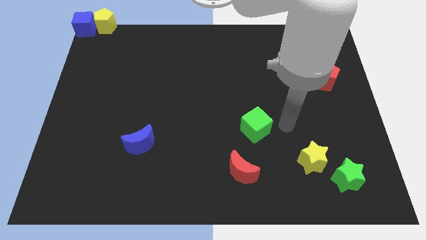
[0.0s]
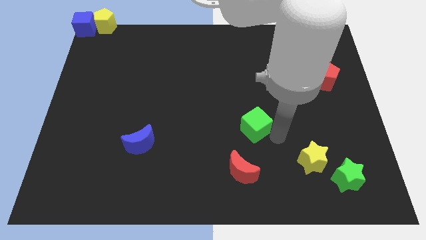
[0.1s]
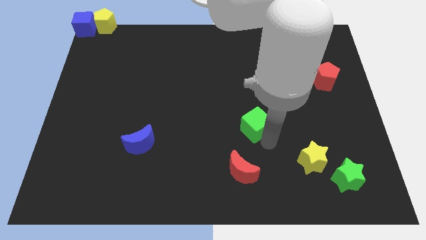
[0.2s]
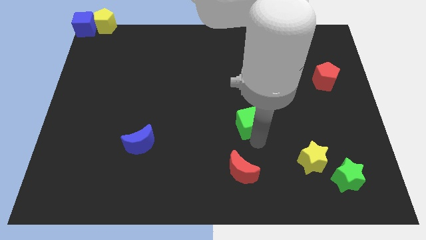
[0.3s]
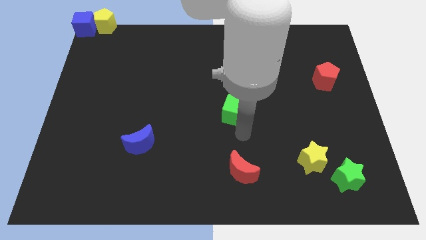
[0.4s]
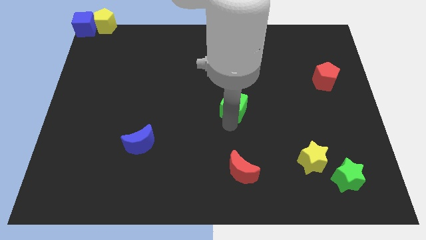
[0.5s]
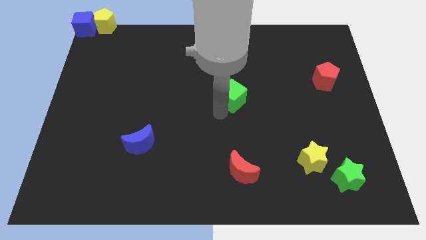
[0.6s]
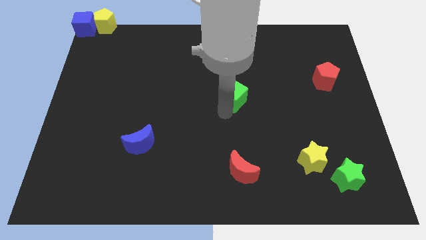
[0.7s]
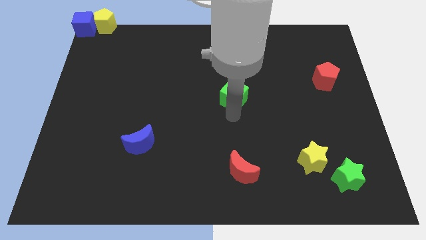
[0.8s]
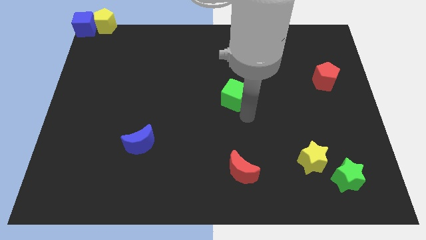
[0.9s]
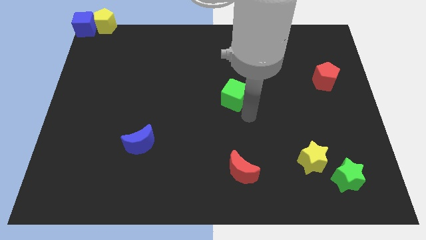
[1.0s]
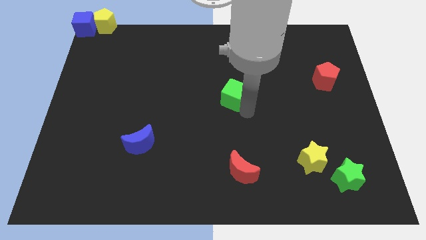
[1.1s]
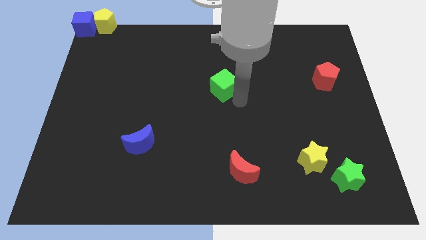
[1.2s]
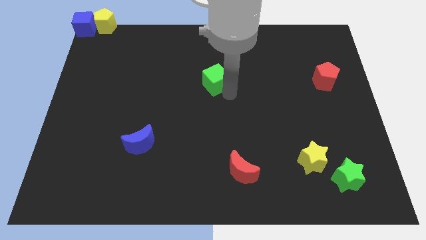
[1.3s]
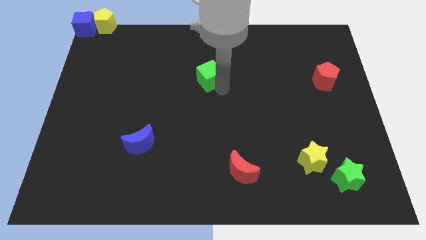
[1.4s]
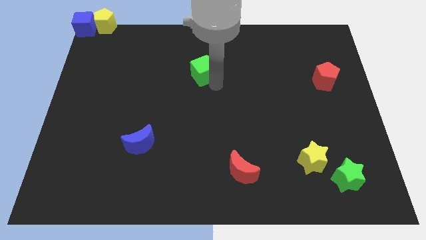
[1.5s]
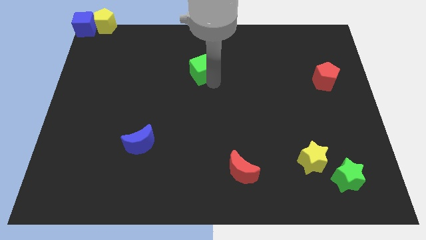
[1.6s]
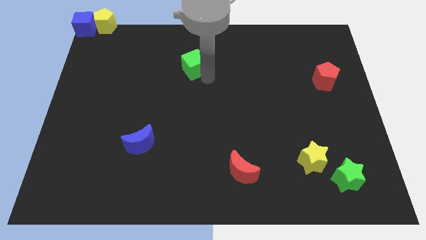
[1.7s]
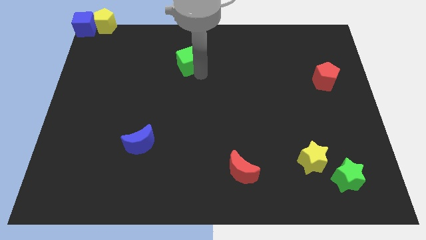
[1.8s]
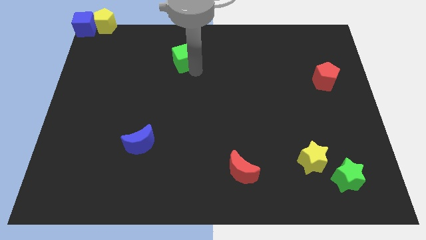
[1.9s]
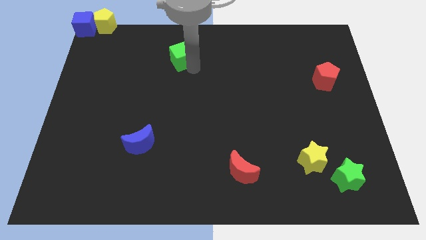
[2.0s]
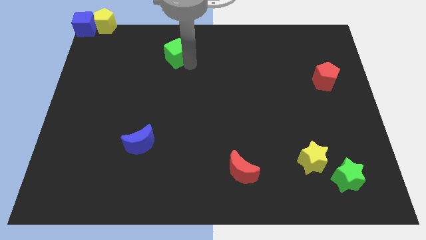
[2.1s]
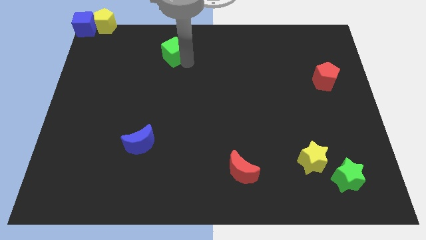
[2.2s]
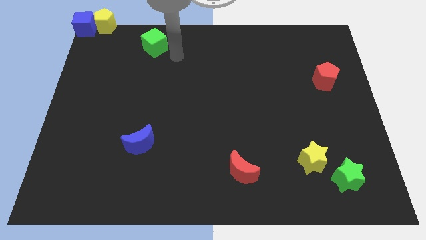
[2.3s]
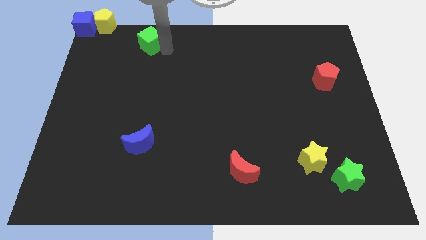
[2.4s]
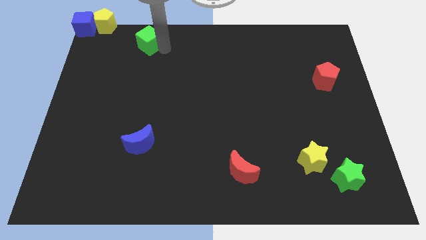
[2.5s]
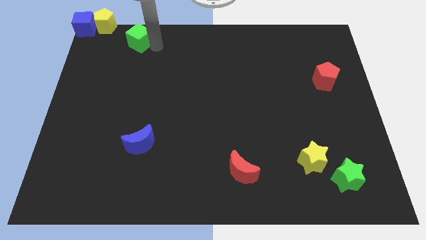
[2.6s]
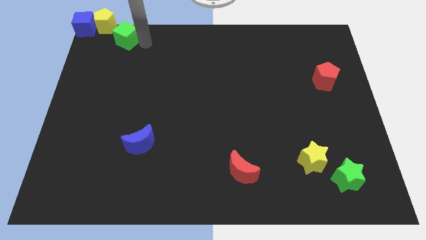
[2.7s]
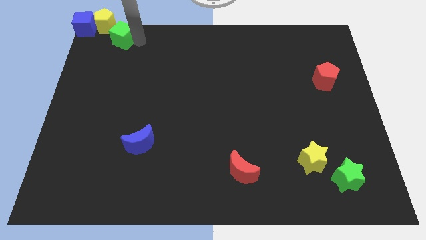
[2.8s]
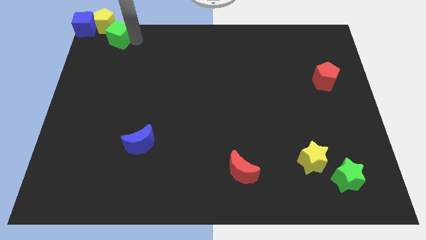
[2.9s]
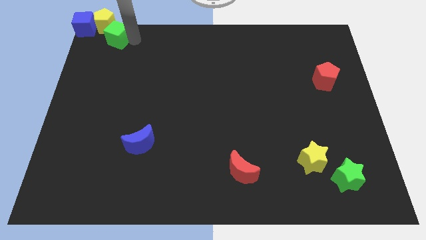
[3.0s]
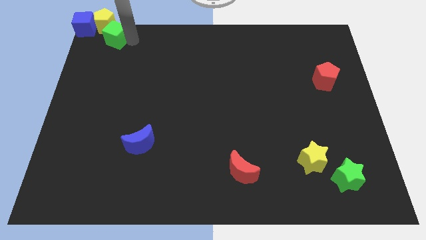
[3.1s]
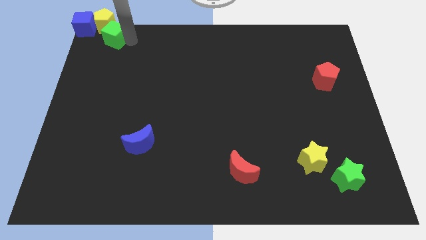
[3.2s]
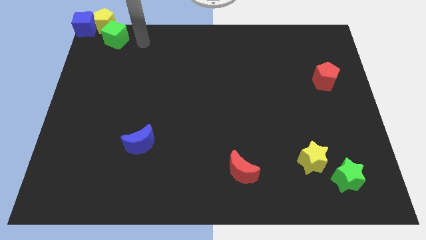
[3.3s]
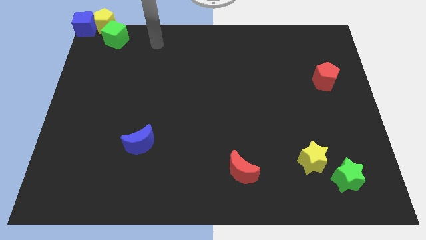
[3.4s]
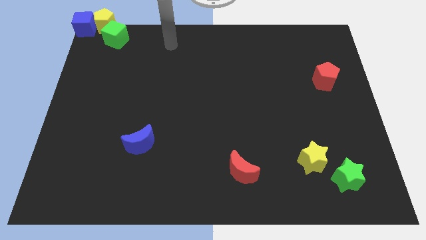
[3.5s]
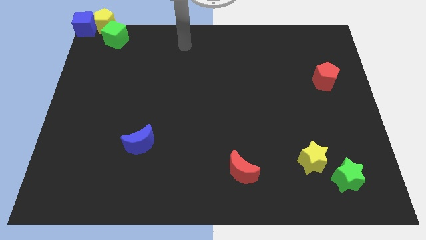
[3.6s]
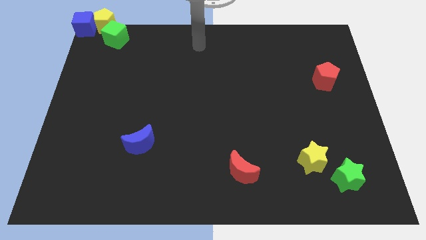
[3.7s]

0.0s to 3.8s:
push the green cube to the bottom right of the yellow pentagon

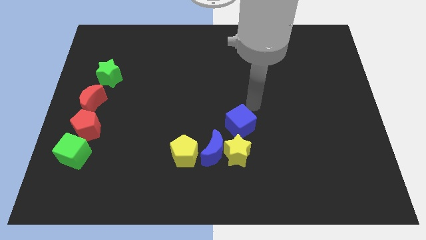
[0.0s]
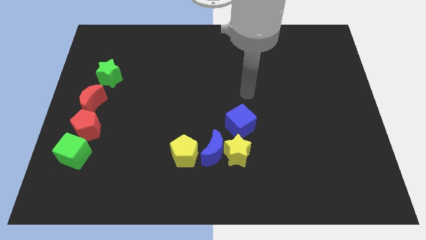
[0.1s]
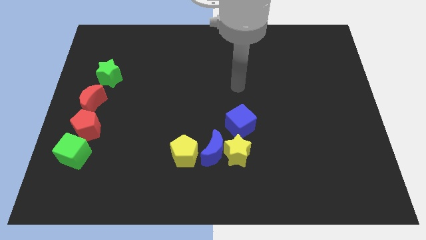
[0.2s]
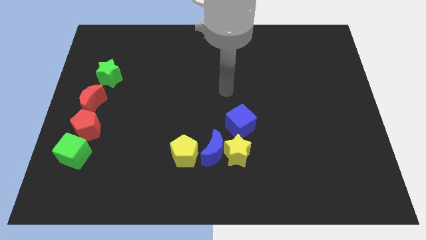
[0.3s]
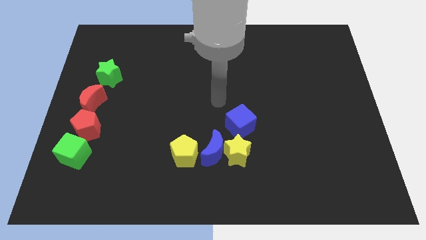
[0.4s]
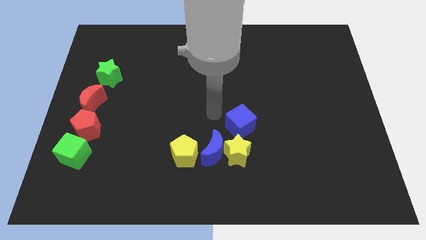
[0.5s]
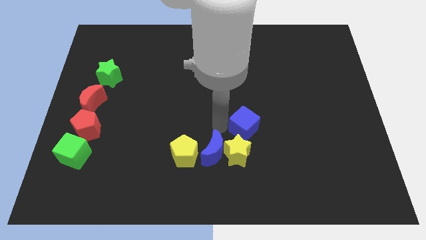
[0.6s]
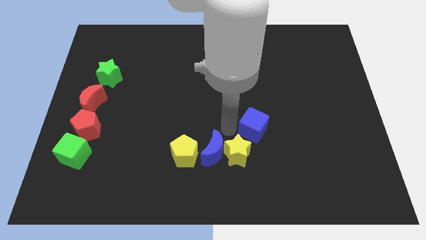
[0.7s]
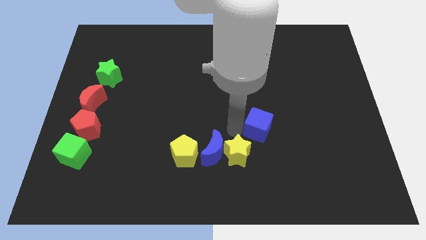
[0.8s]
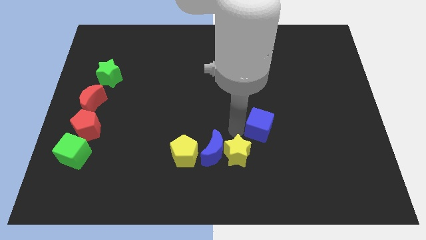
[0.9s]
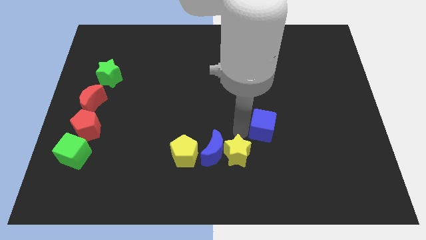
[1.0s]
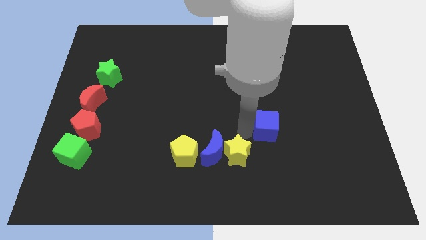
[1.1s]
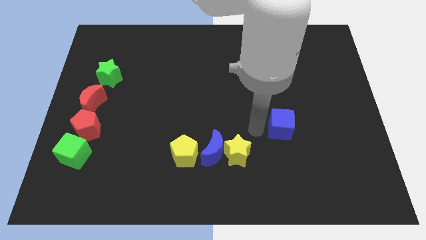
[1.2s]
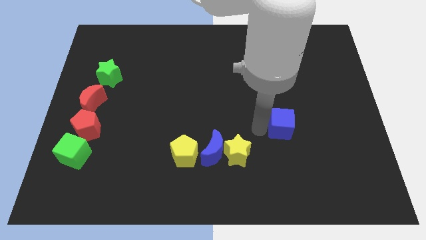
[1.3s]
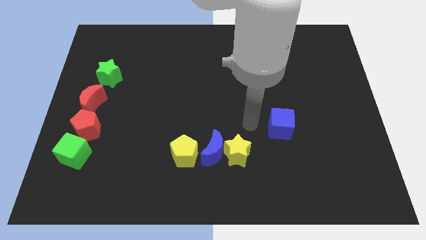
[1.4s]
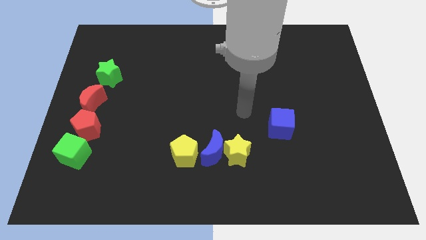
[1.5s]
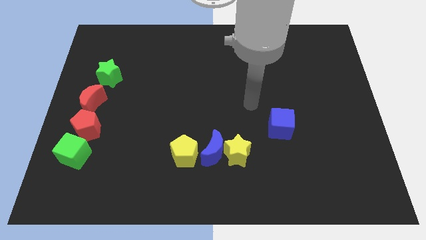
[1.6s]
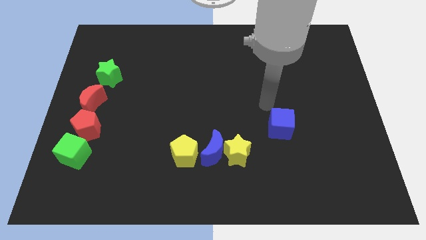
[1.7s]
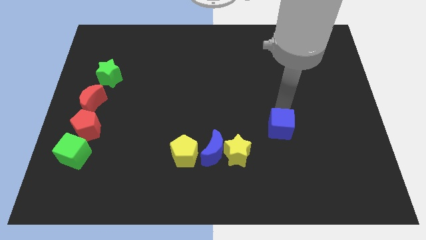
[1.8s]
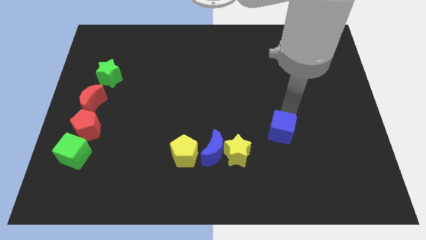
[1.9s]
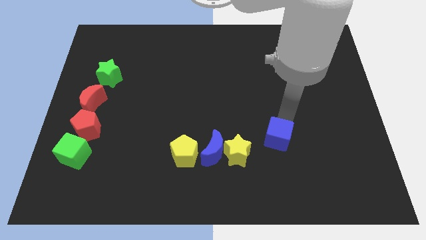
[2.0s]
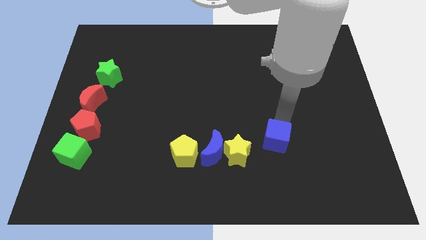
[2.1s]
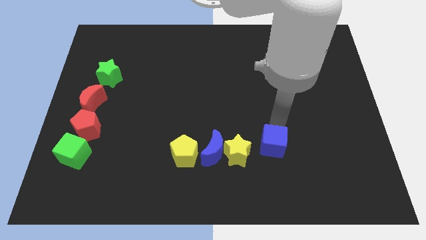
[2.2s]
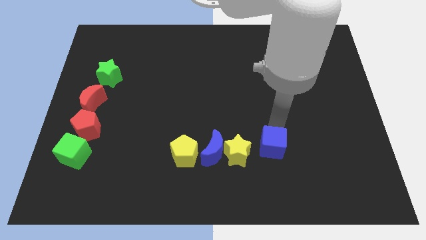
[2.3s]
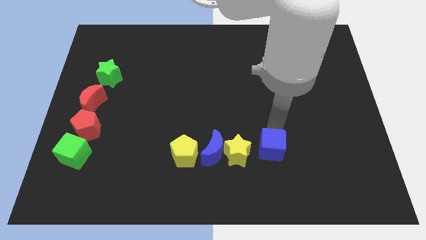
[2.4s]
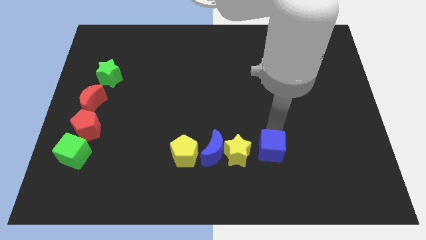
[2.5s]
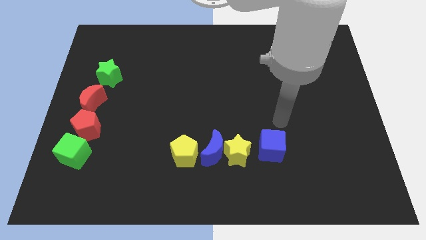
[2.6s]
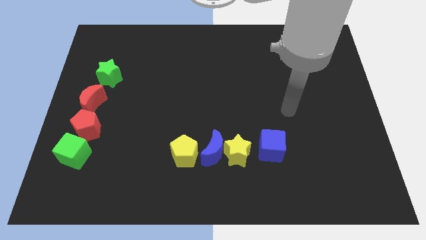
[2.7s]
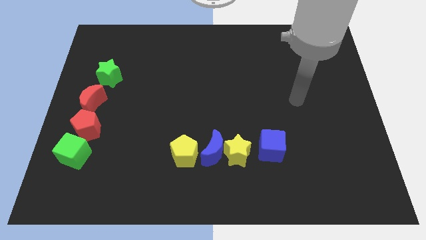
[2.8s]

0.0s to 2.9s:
place blue cube to the right of yellow star

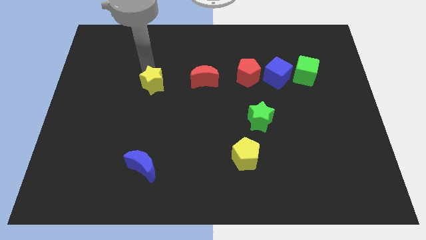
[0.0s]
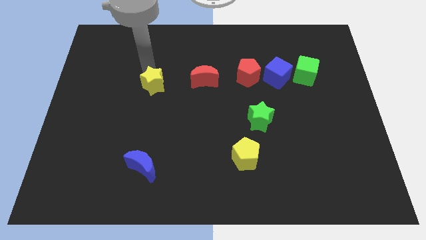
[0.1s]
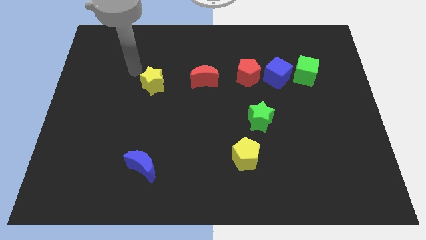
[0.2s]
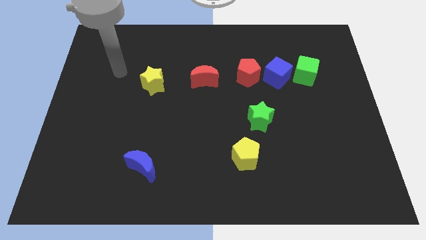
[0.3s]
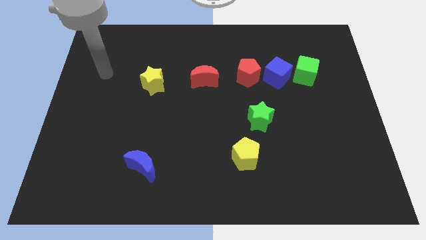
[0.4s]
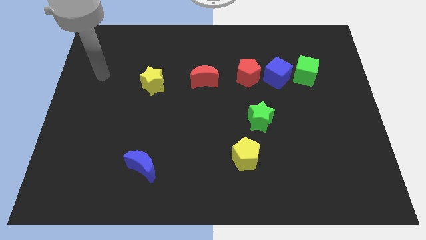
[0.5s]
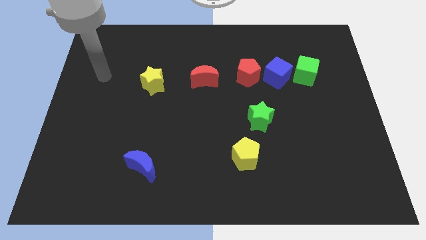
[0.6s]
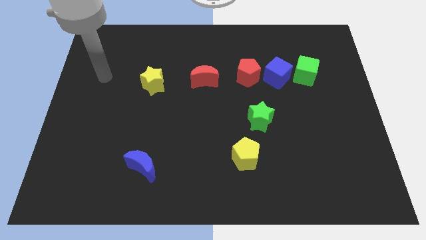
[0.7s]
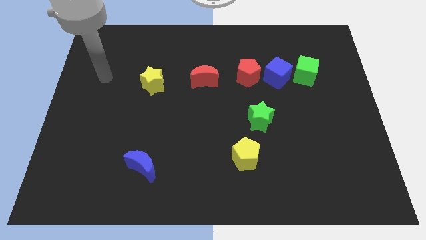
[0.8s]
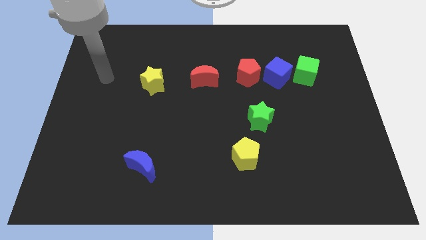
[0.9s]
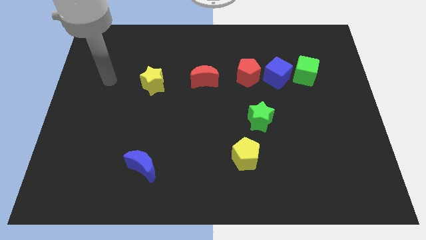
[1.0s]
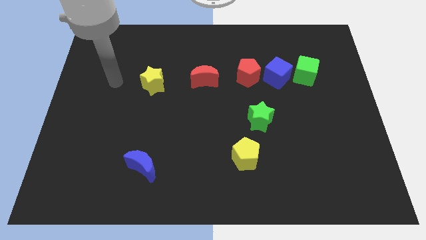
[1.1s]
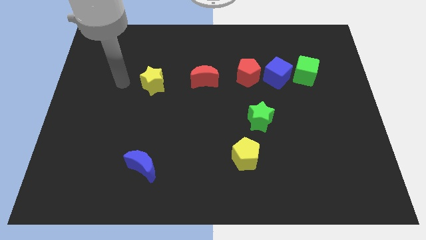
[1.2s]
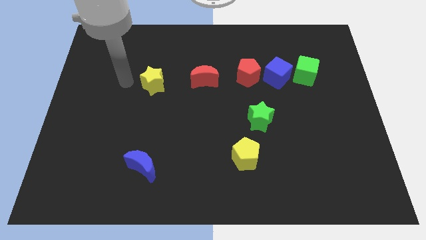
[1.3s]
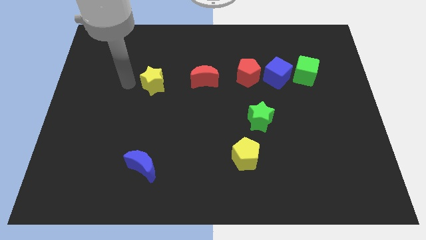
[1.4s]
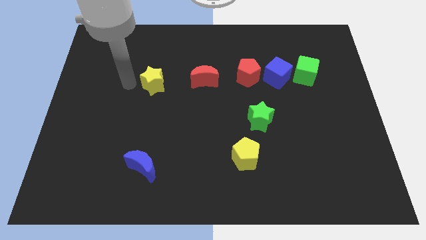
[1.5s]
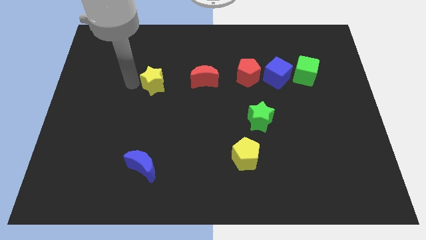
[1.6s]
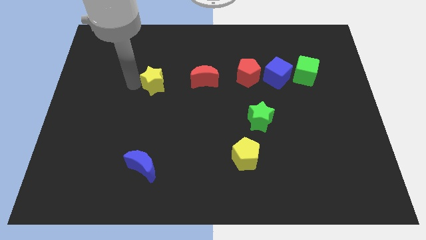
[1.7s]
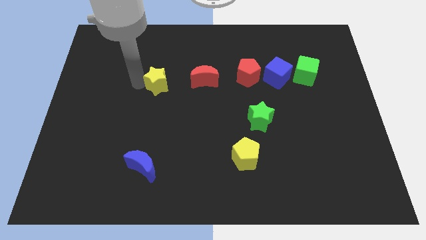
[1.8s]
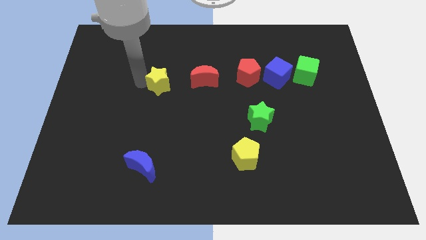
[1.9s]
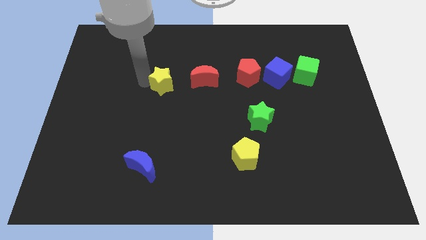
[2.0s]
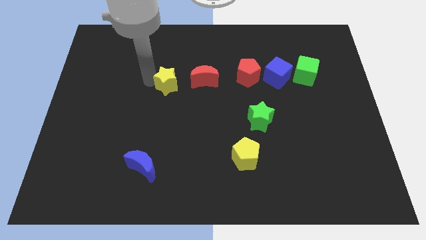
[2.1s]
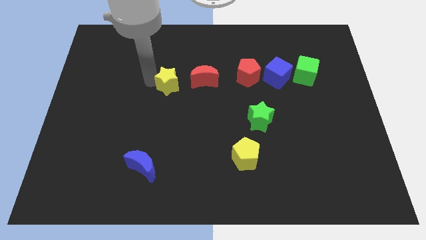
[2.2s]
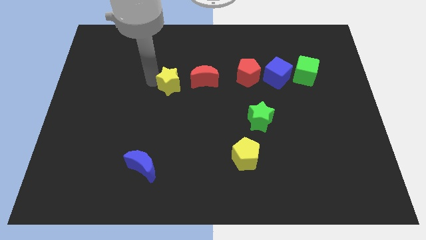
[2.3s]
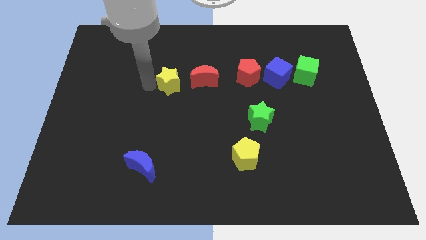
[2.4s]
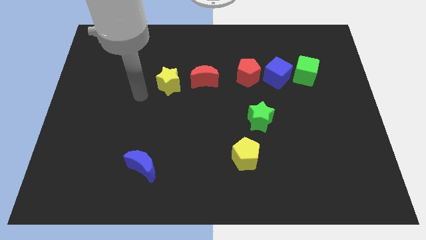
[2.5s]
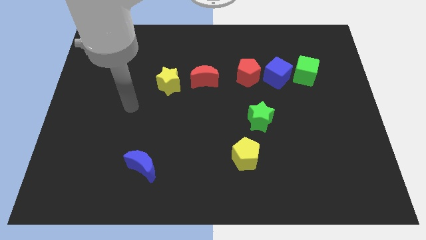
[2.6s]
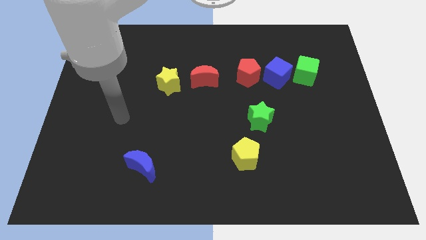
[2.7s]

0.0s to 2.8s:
move the yellow star close to the red pentagon
